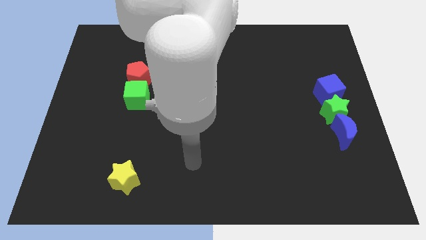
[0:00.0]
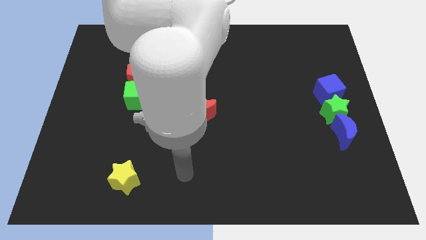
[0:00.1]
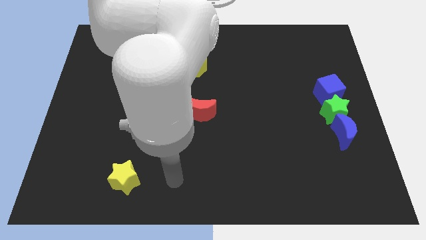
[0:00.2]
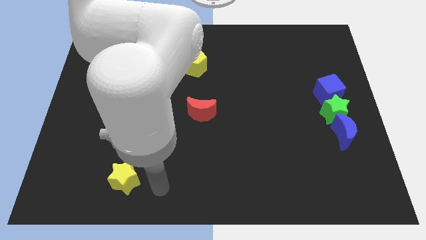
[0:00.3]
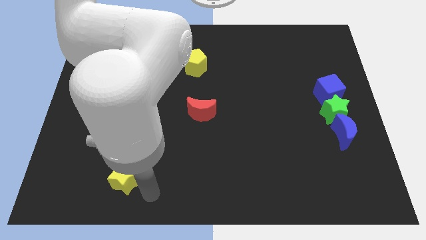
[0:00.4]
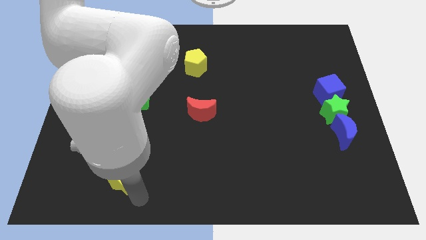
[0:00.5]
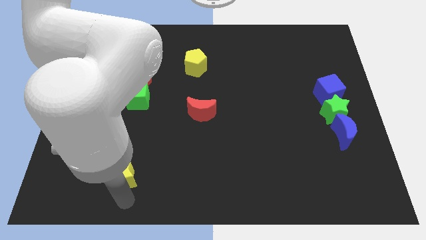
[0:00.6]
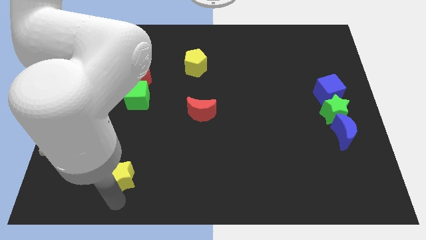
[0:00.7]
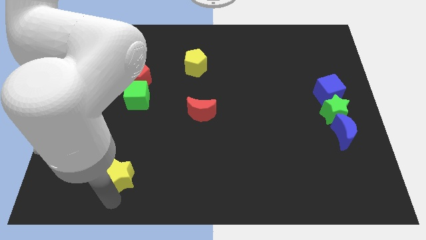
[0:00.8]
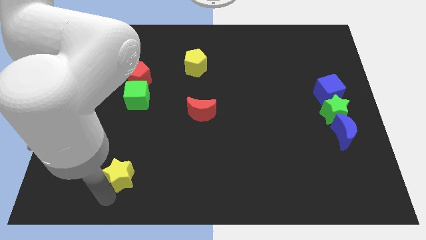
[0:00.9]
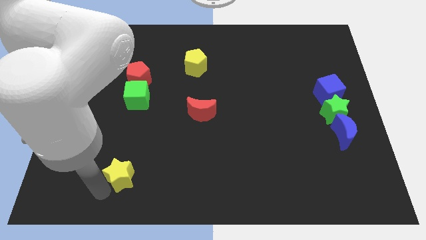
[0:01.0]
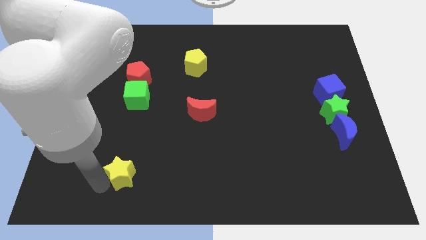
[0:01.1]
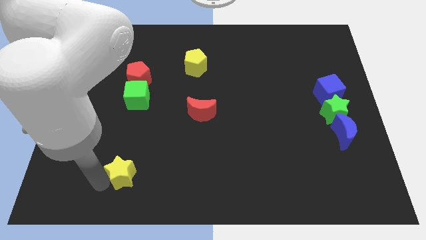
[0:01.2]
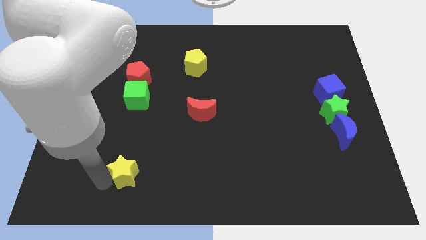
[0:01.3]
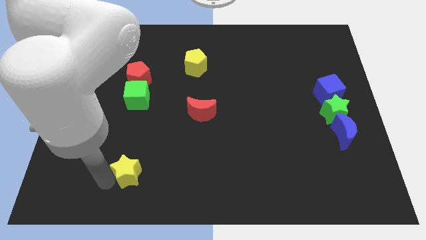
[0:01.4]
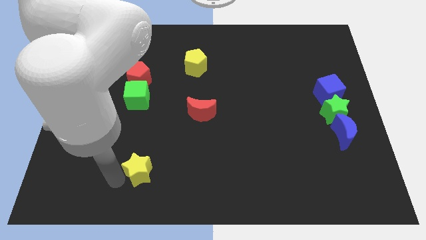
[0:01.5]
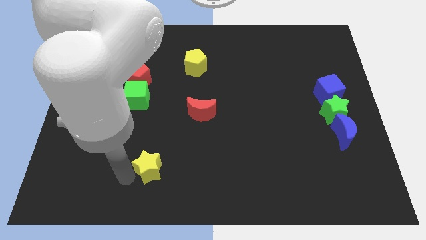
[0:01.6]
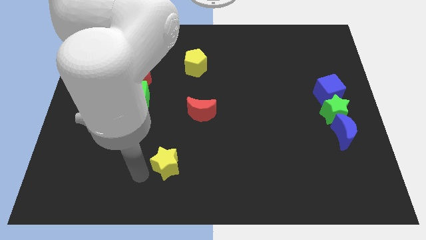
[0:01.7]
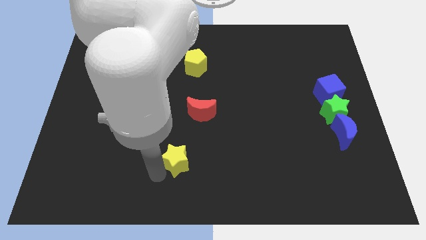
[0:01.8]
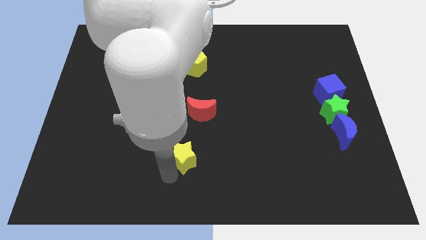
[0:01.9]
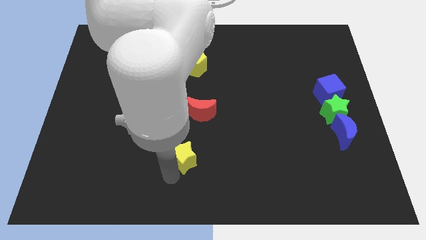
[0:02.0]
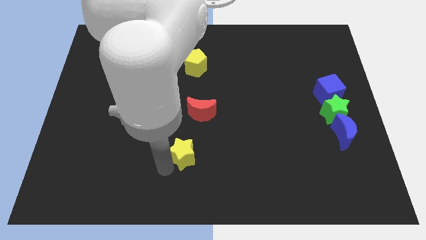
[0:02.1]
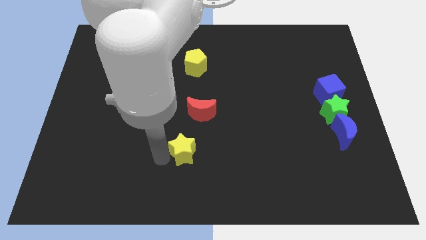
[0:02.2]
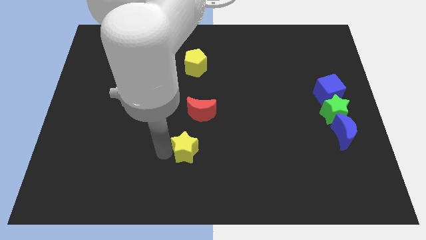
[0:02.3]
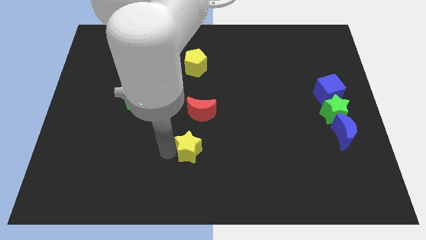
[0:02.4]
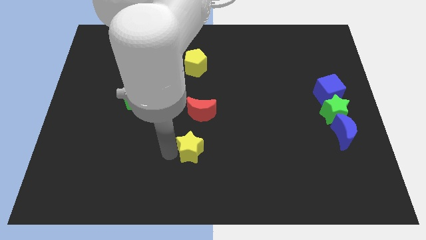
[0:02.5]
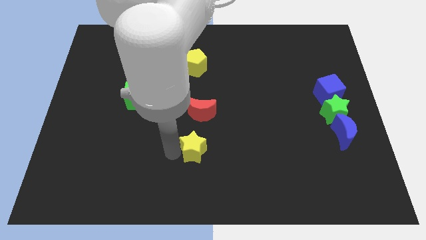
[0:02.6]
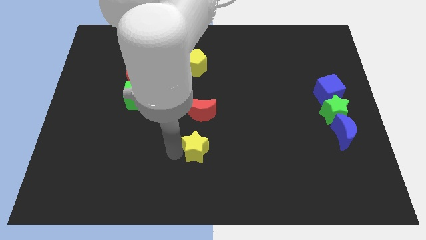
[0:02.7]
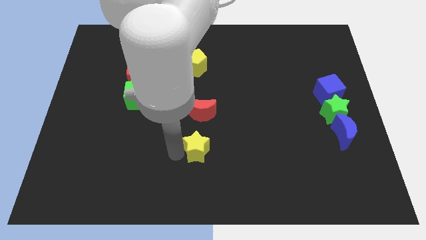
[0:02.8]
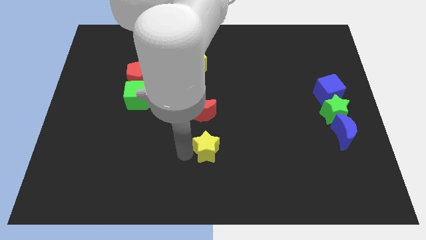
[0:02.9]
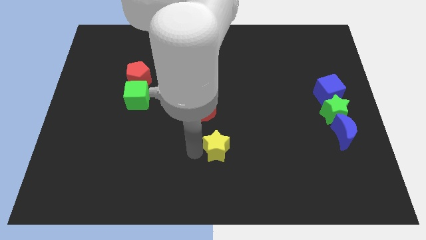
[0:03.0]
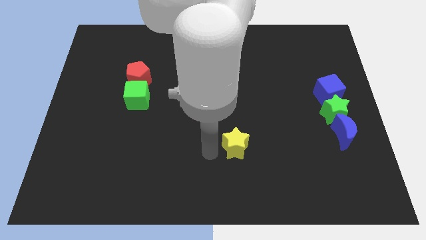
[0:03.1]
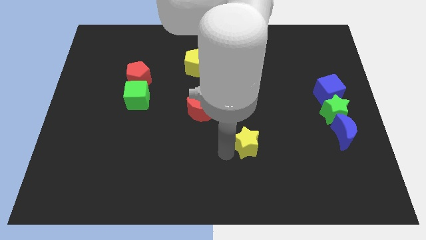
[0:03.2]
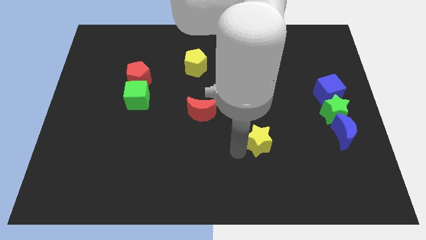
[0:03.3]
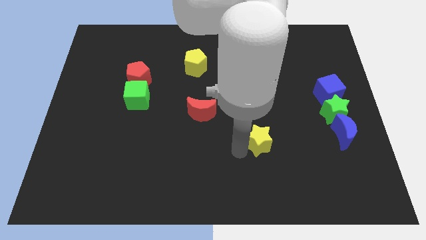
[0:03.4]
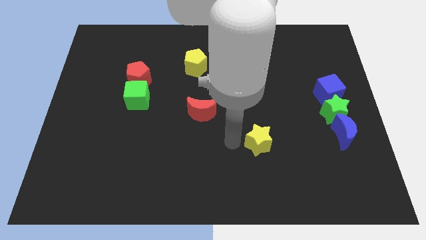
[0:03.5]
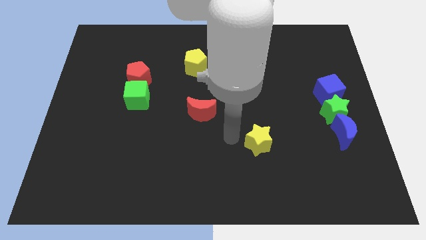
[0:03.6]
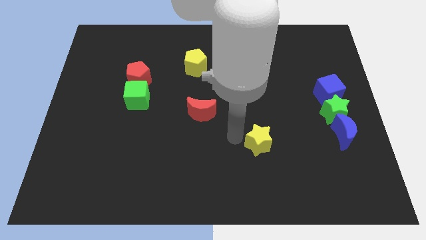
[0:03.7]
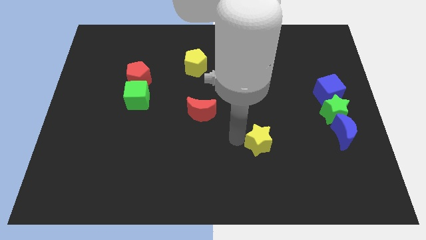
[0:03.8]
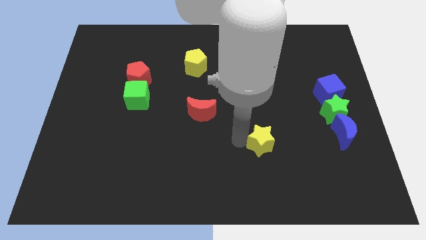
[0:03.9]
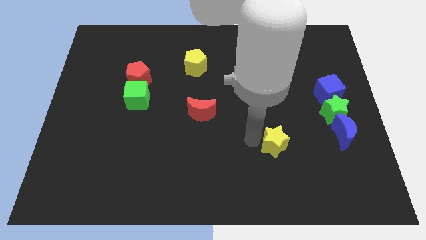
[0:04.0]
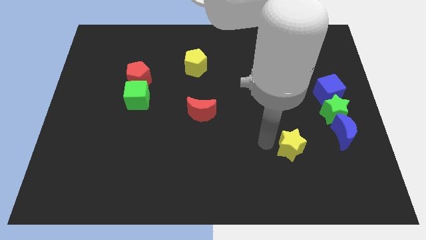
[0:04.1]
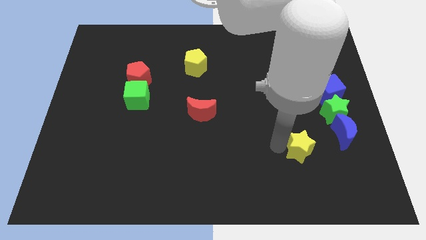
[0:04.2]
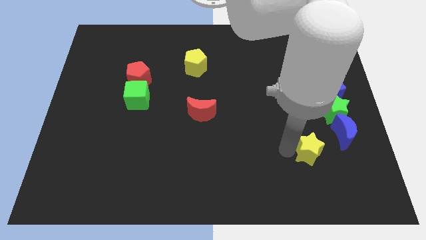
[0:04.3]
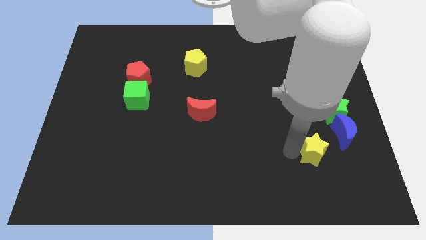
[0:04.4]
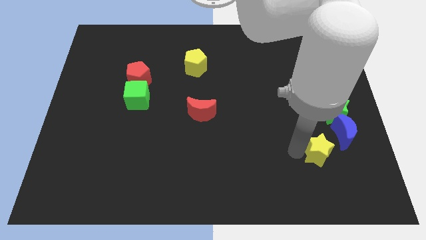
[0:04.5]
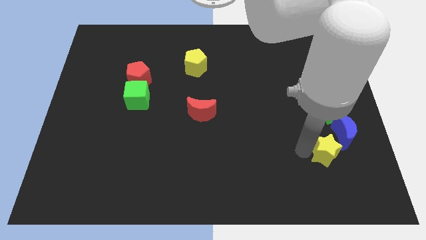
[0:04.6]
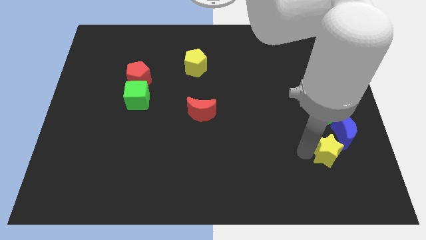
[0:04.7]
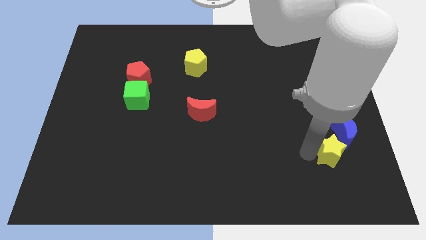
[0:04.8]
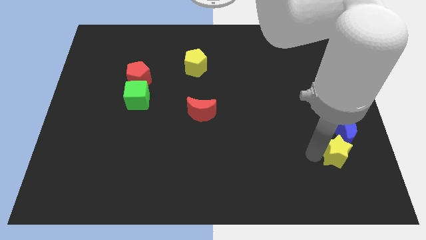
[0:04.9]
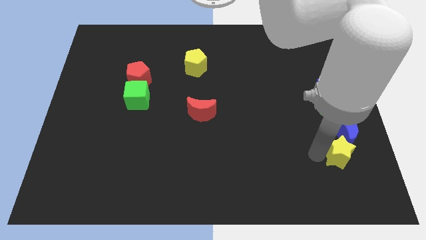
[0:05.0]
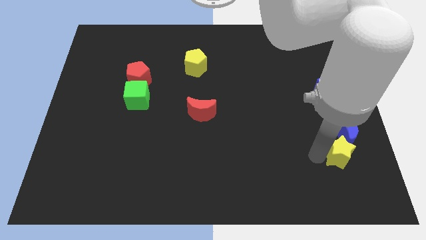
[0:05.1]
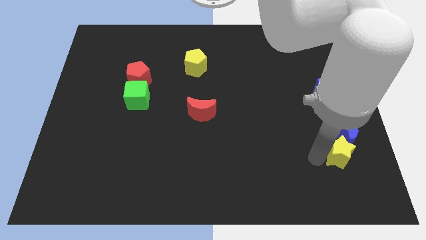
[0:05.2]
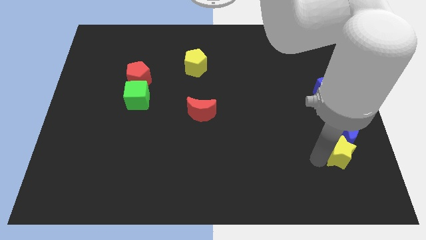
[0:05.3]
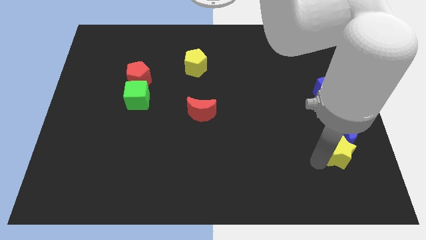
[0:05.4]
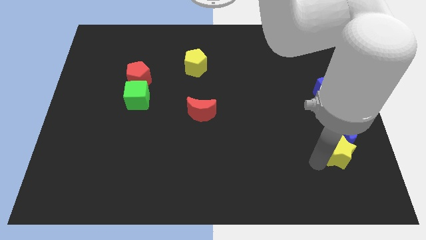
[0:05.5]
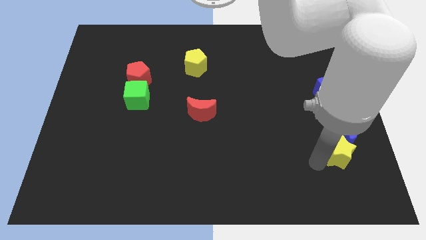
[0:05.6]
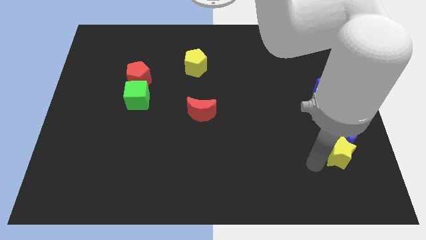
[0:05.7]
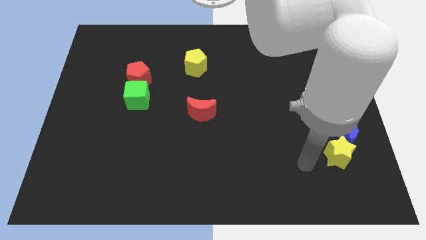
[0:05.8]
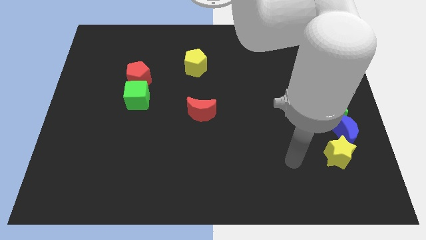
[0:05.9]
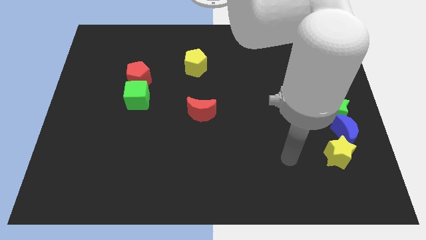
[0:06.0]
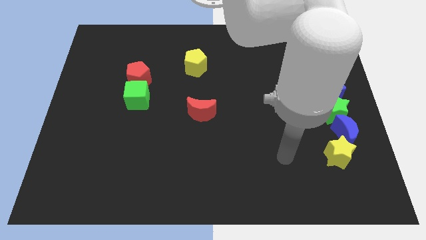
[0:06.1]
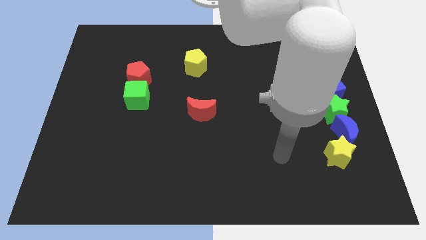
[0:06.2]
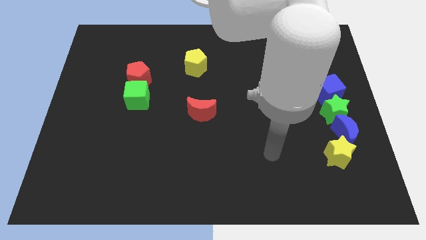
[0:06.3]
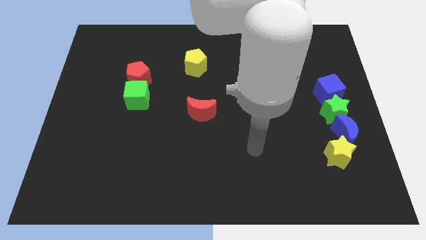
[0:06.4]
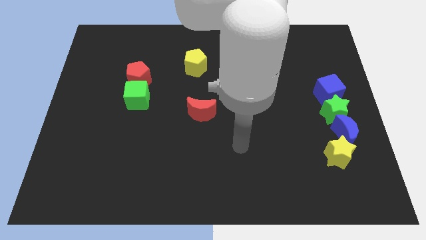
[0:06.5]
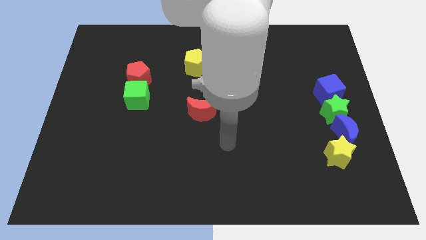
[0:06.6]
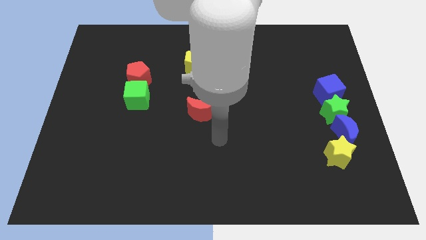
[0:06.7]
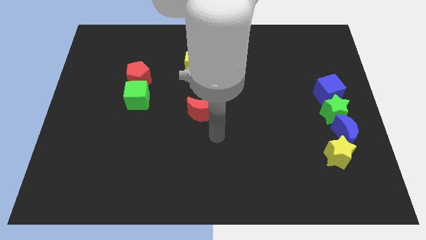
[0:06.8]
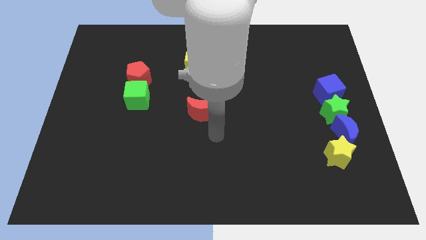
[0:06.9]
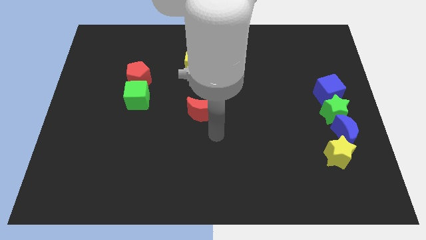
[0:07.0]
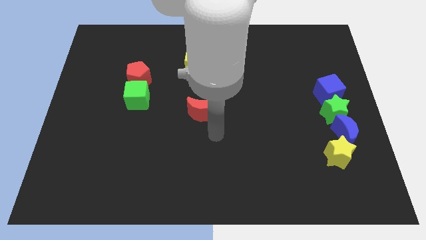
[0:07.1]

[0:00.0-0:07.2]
push the yellow star to form a vertical line with a group of blocks

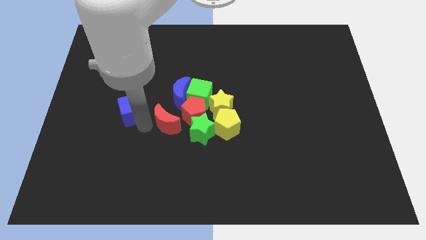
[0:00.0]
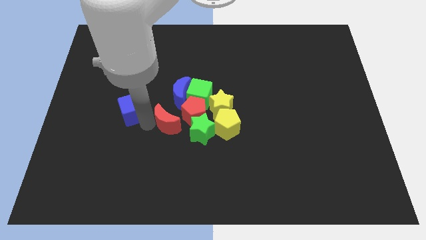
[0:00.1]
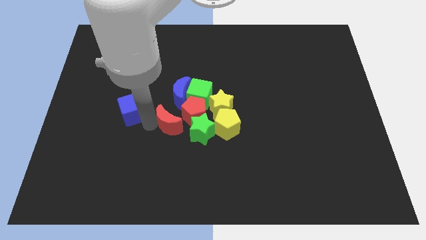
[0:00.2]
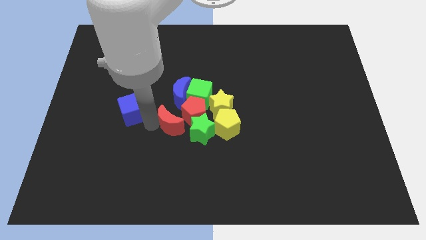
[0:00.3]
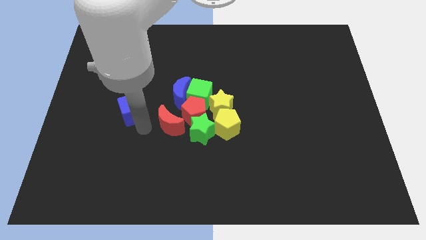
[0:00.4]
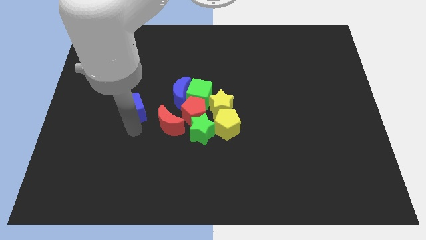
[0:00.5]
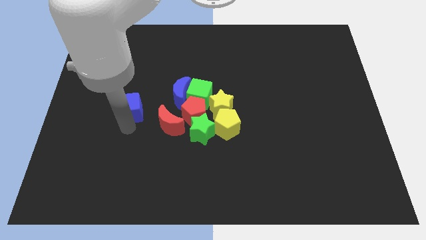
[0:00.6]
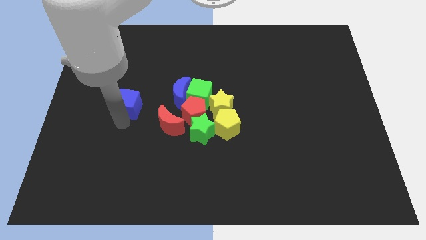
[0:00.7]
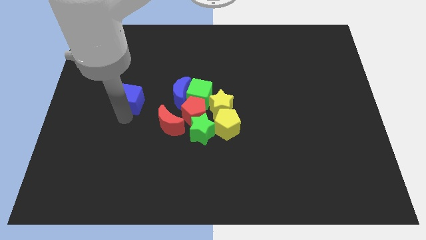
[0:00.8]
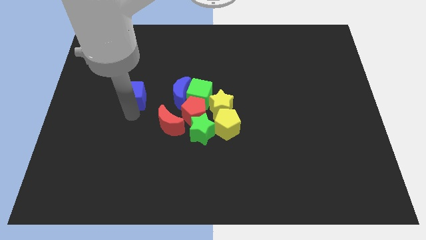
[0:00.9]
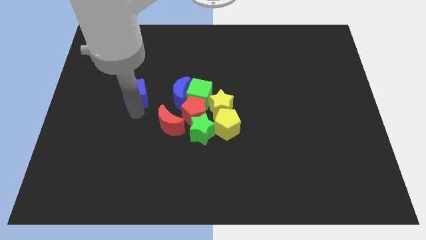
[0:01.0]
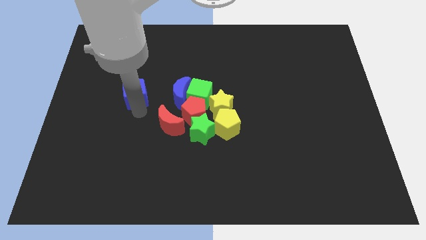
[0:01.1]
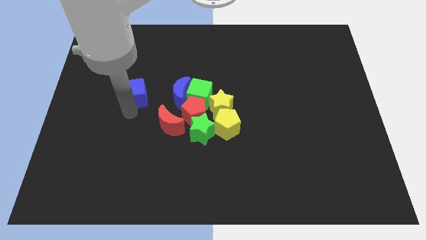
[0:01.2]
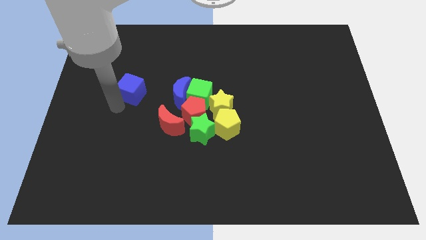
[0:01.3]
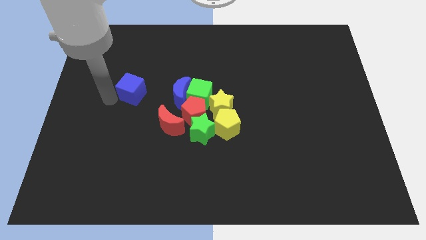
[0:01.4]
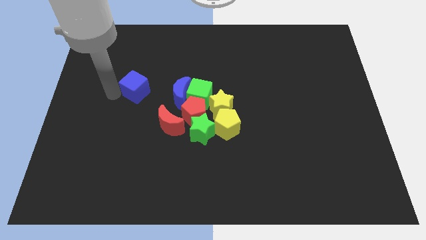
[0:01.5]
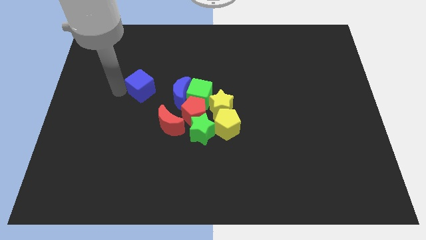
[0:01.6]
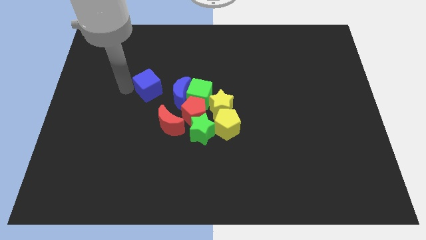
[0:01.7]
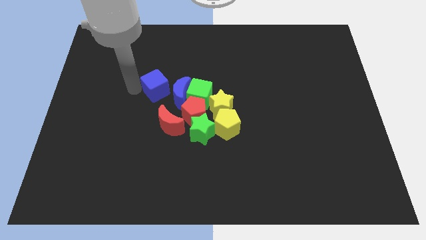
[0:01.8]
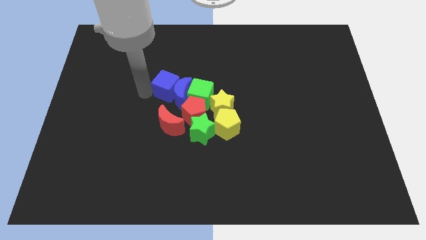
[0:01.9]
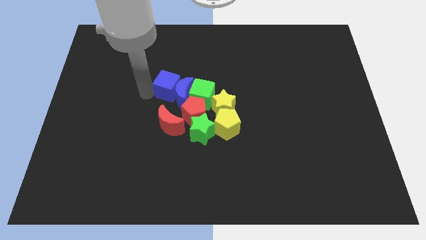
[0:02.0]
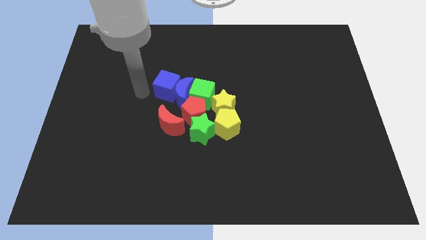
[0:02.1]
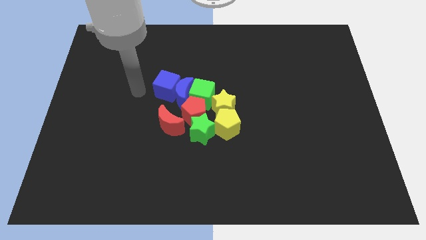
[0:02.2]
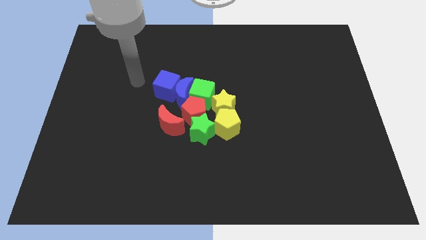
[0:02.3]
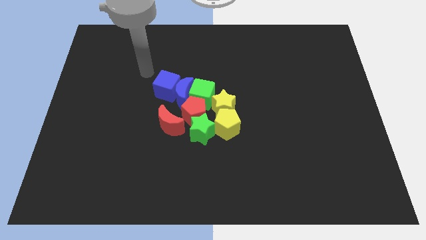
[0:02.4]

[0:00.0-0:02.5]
move blue cube into group of blocks
